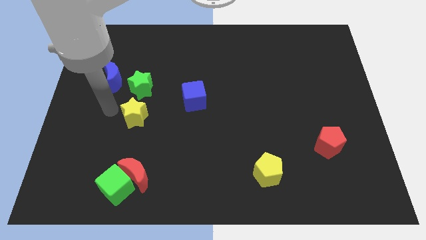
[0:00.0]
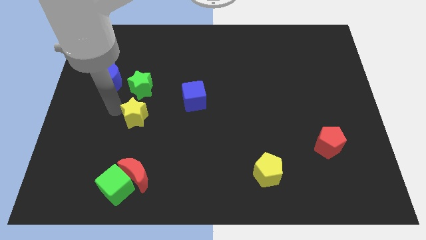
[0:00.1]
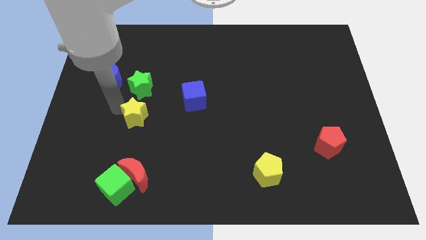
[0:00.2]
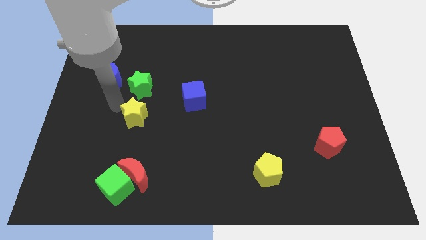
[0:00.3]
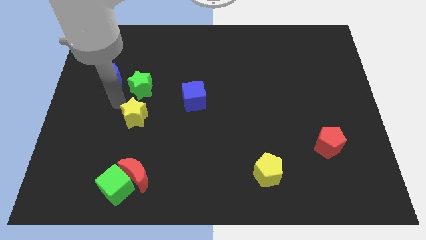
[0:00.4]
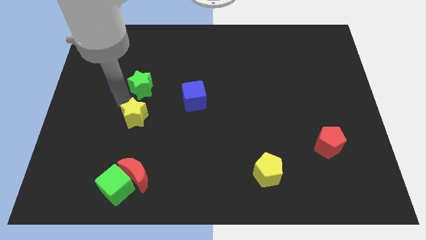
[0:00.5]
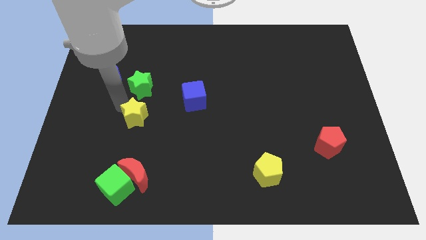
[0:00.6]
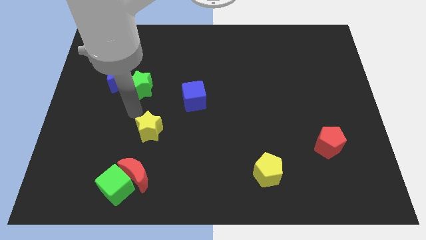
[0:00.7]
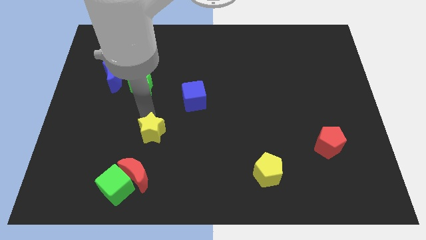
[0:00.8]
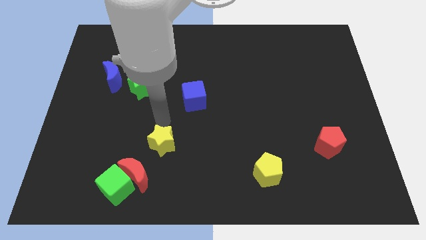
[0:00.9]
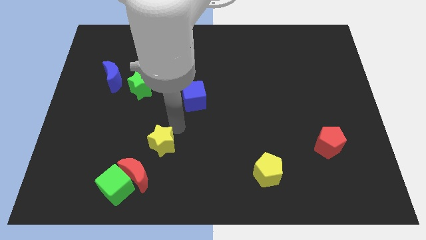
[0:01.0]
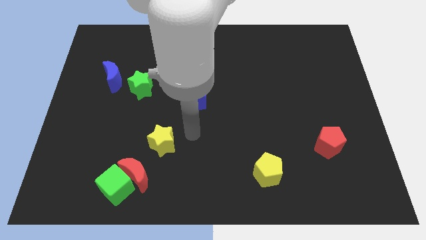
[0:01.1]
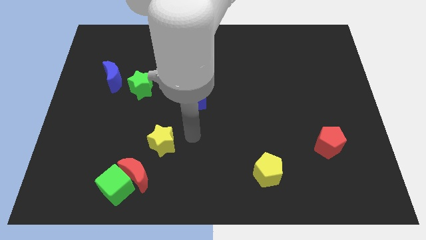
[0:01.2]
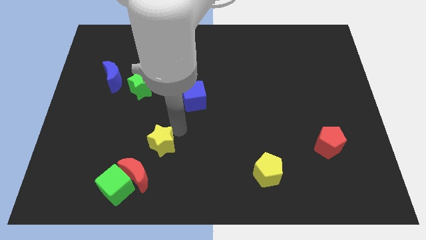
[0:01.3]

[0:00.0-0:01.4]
place the yellow star diagonally top right to the red moon

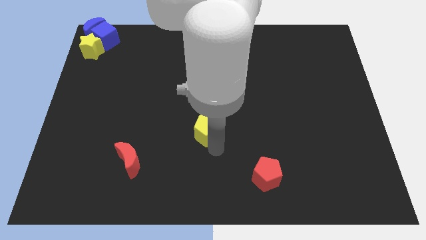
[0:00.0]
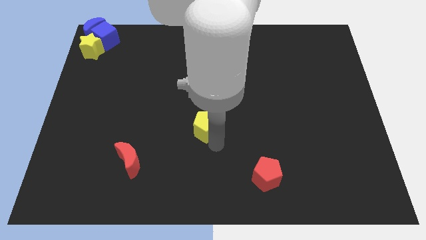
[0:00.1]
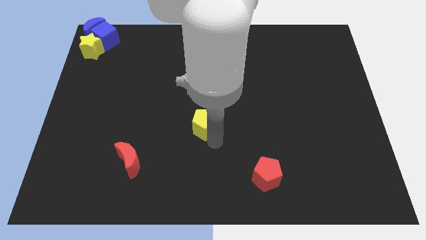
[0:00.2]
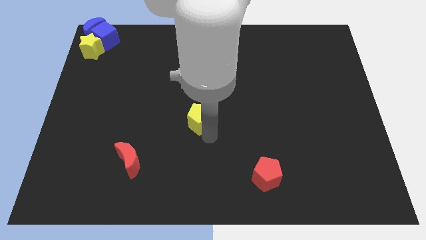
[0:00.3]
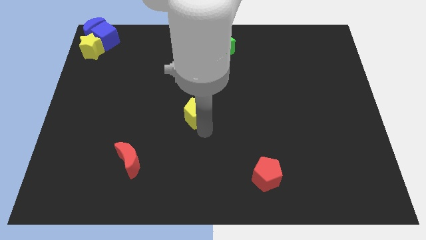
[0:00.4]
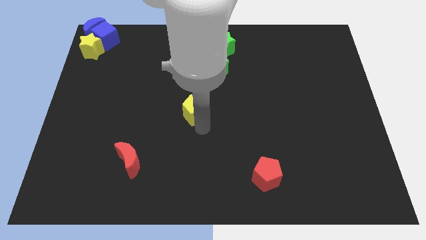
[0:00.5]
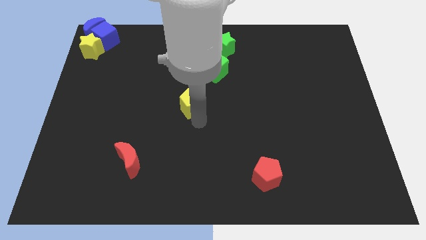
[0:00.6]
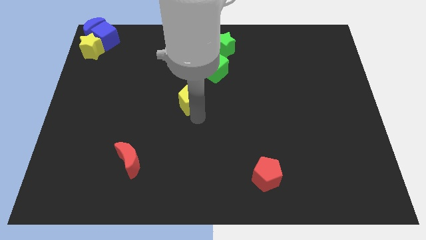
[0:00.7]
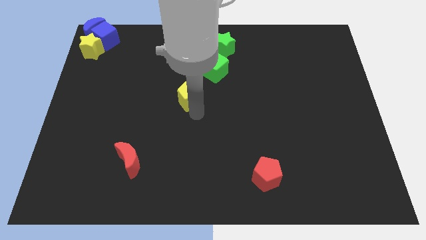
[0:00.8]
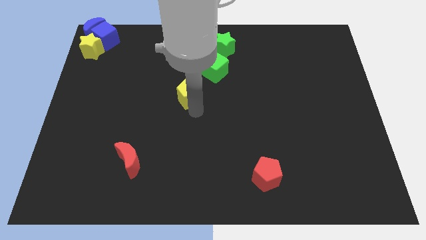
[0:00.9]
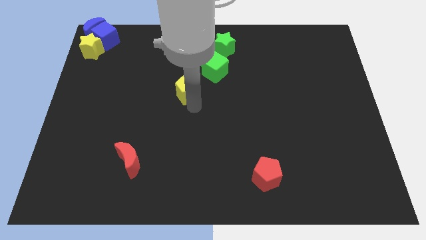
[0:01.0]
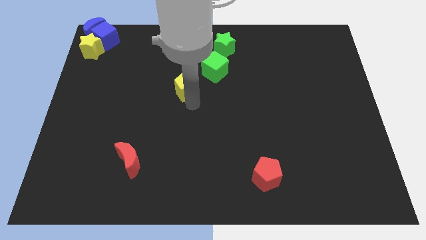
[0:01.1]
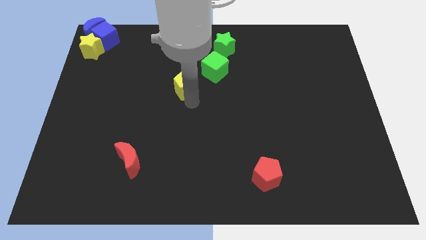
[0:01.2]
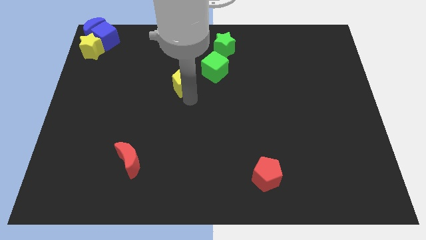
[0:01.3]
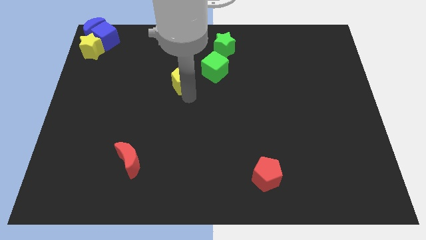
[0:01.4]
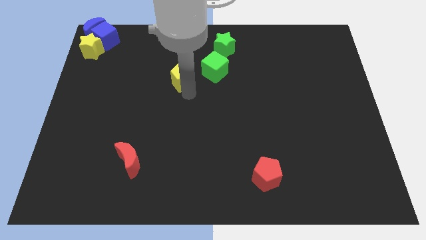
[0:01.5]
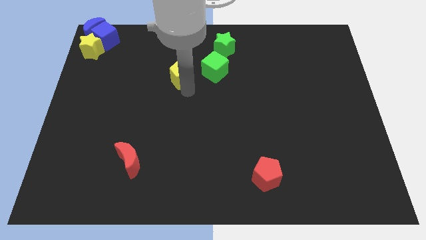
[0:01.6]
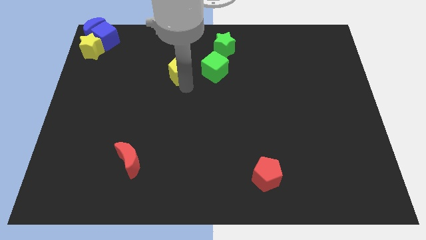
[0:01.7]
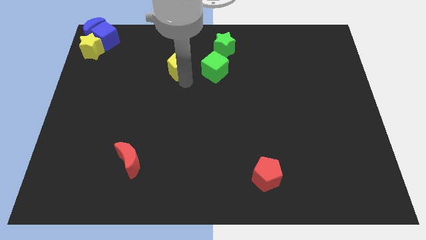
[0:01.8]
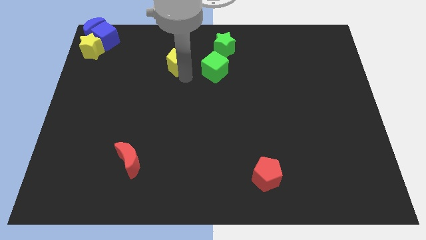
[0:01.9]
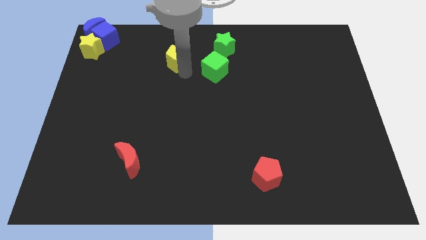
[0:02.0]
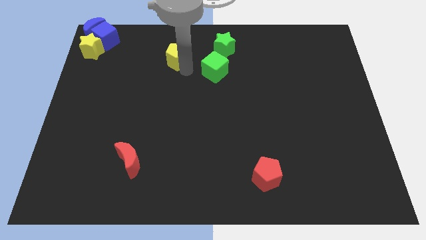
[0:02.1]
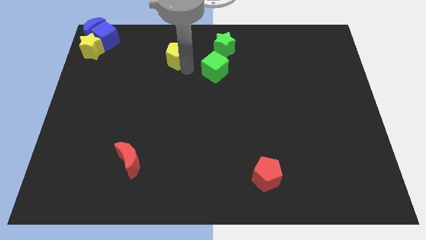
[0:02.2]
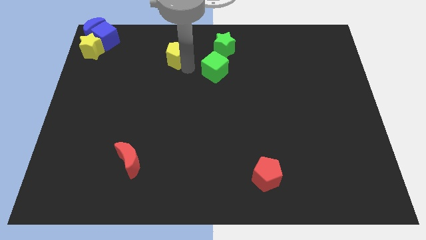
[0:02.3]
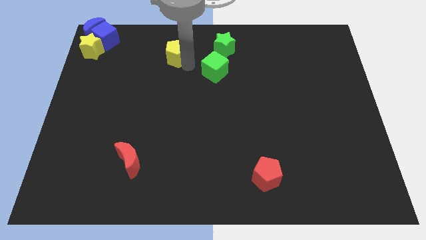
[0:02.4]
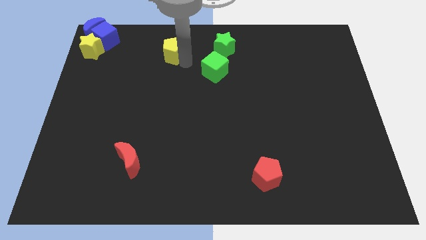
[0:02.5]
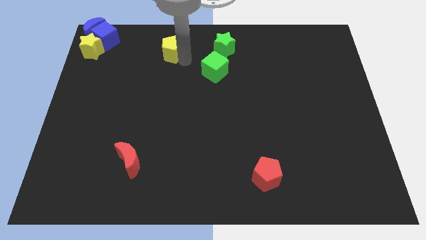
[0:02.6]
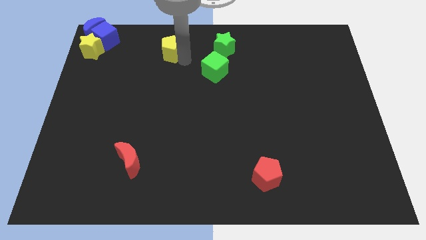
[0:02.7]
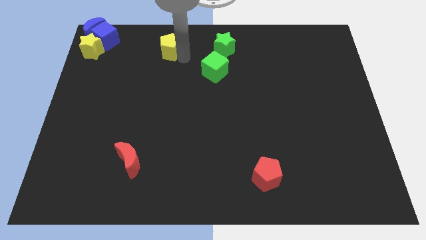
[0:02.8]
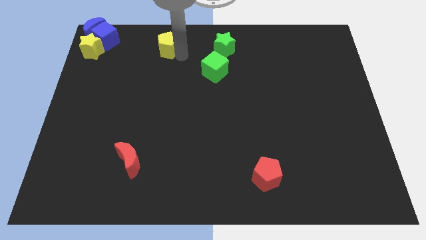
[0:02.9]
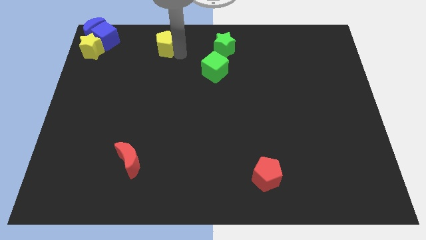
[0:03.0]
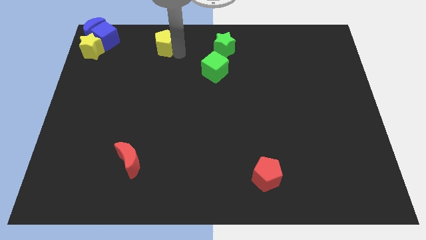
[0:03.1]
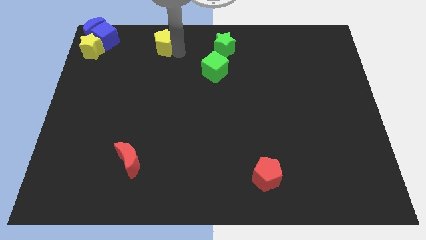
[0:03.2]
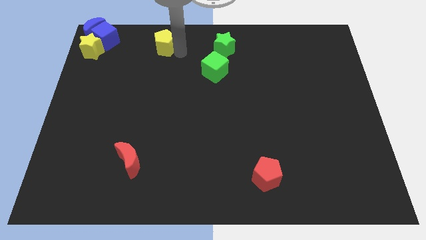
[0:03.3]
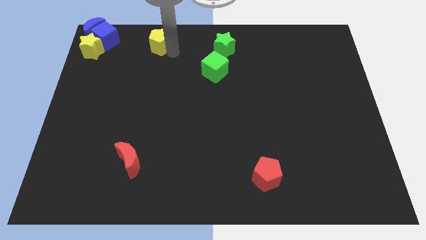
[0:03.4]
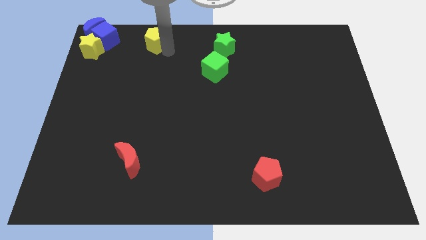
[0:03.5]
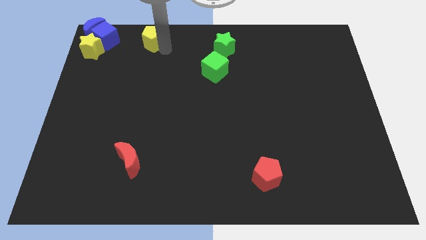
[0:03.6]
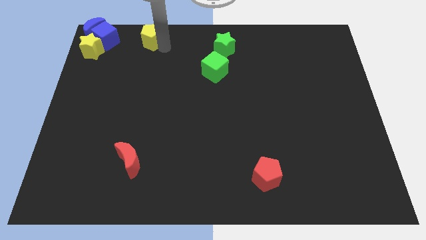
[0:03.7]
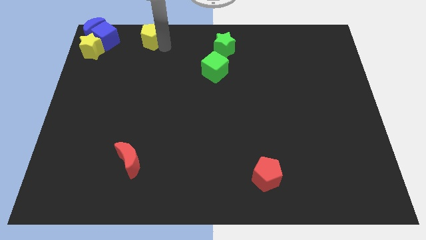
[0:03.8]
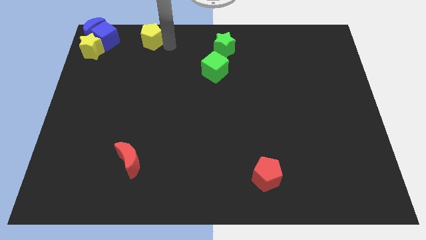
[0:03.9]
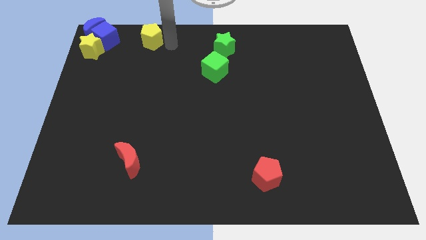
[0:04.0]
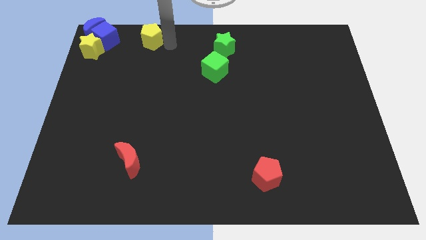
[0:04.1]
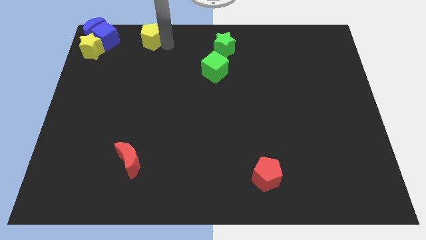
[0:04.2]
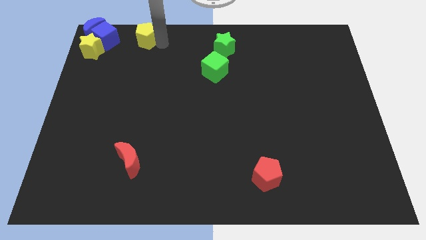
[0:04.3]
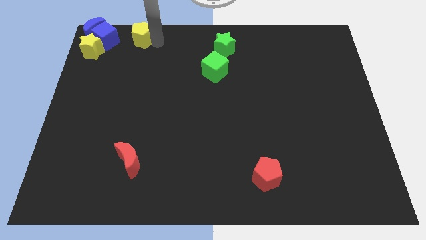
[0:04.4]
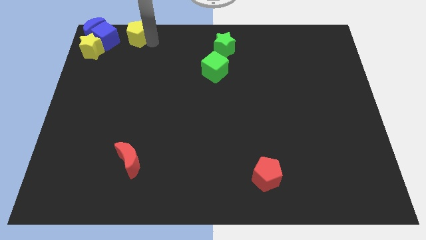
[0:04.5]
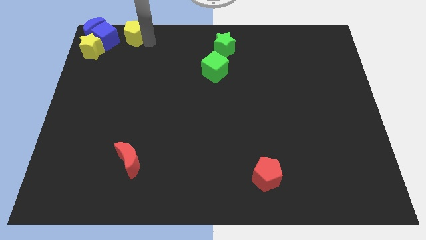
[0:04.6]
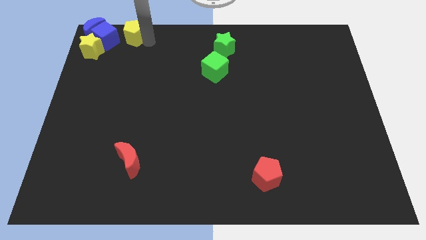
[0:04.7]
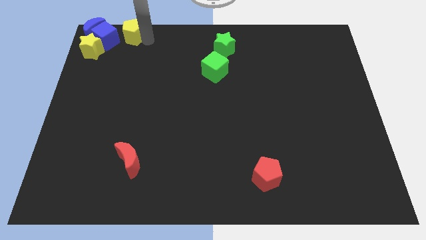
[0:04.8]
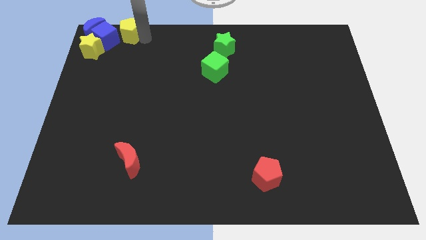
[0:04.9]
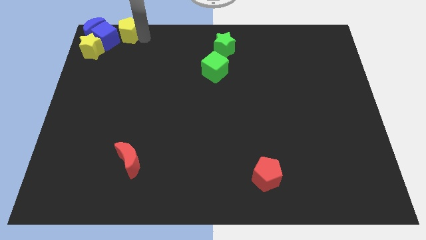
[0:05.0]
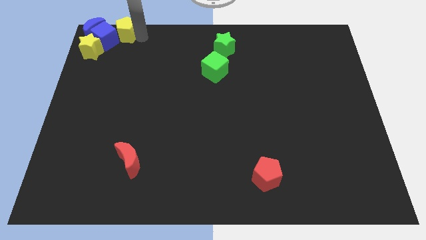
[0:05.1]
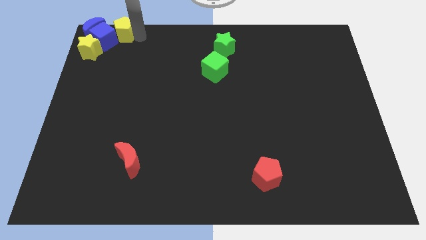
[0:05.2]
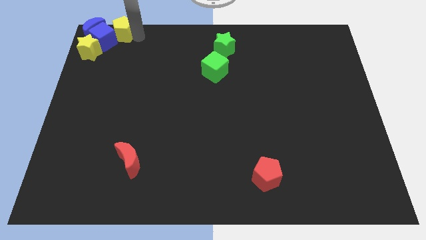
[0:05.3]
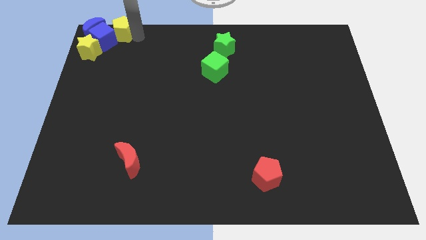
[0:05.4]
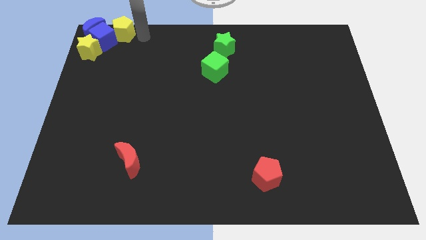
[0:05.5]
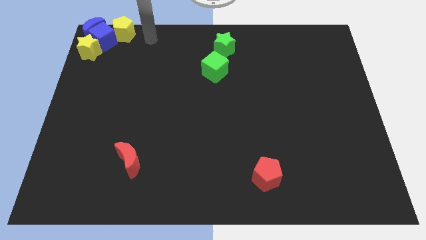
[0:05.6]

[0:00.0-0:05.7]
move yellow pentagon right besid e the blue cube

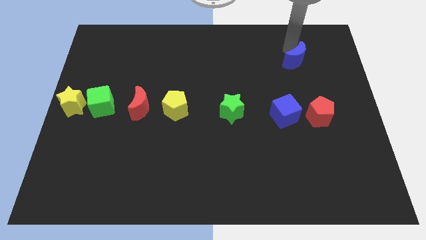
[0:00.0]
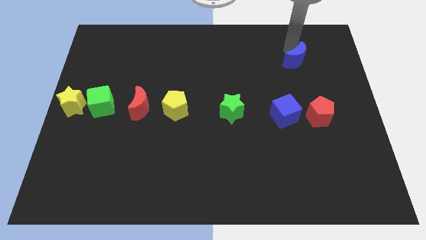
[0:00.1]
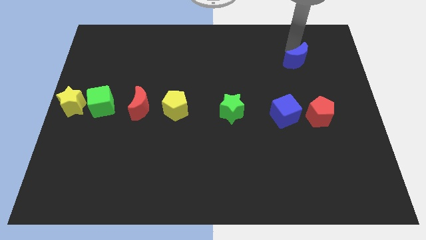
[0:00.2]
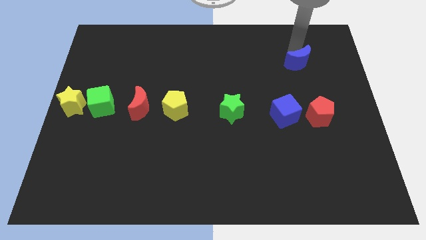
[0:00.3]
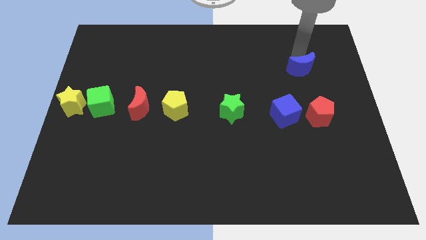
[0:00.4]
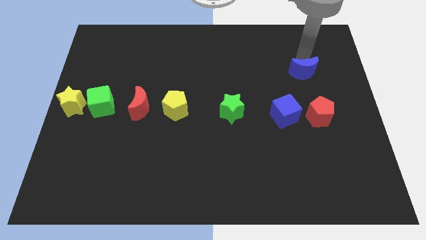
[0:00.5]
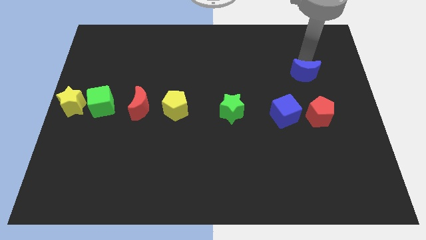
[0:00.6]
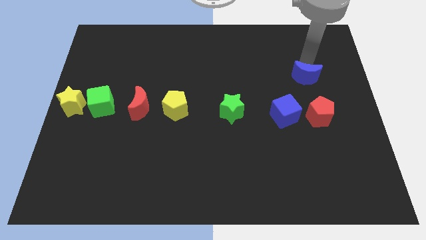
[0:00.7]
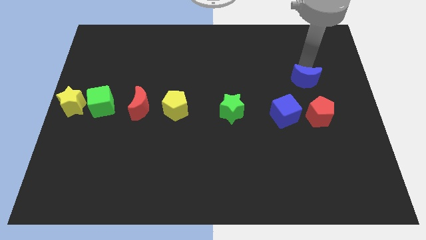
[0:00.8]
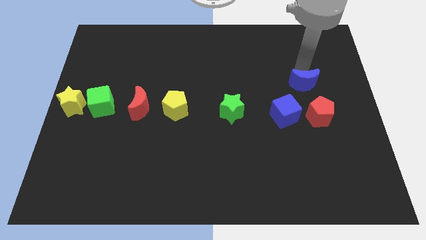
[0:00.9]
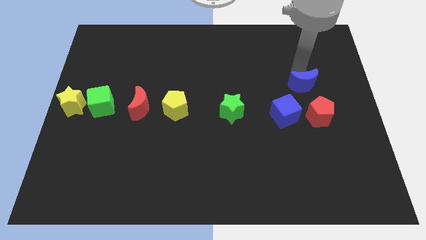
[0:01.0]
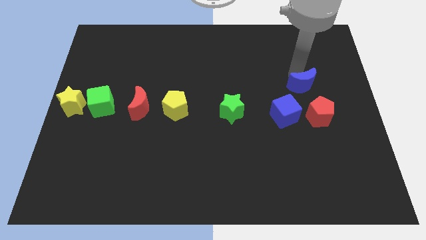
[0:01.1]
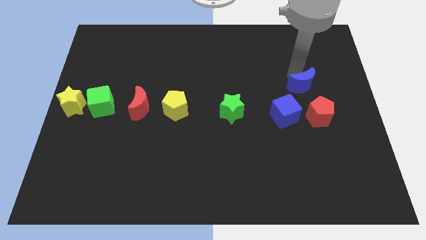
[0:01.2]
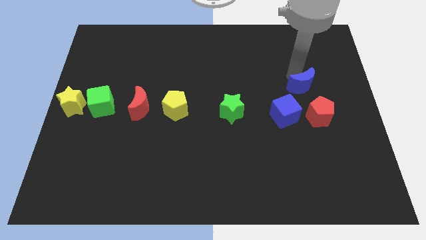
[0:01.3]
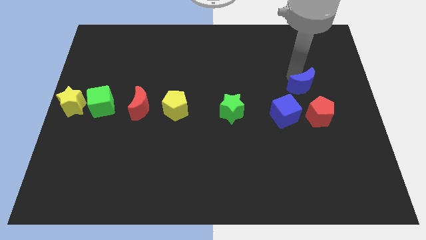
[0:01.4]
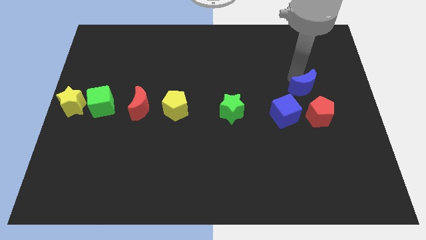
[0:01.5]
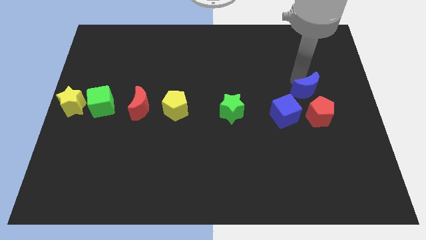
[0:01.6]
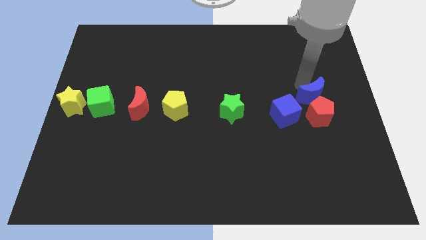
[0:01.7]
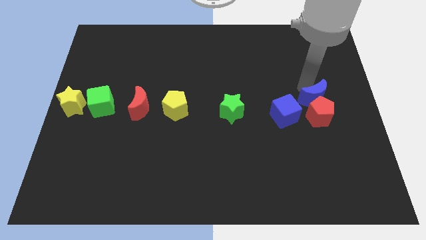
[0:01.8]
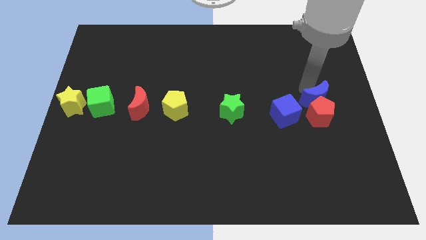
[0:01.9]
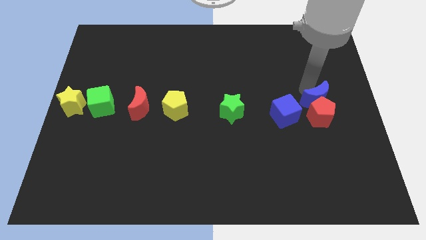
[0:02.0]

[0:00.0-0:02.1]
move the blue crescent above the red pentagon
